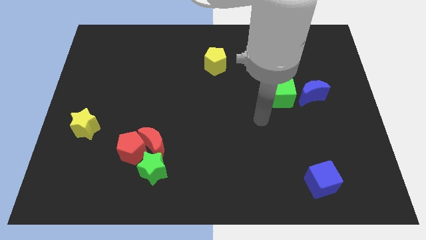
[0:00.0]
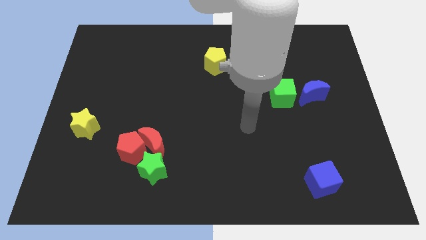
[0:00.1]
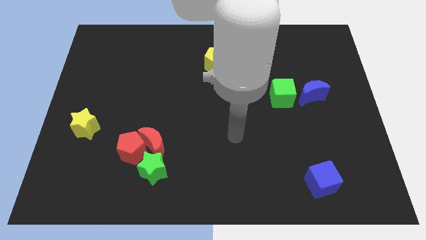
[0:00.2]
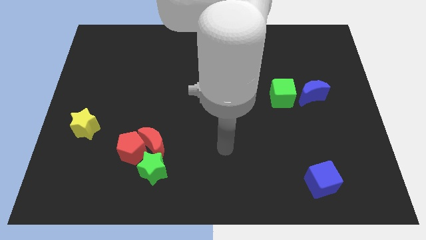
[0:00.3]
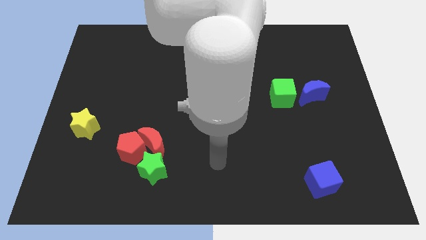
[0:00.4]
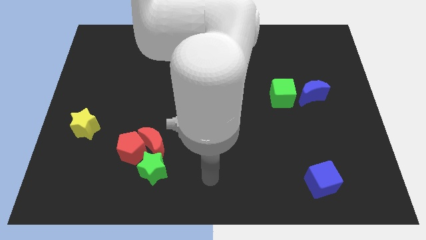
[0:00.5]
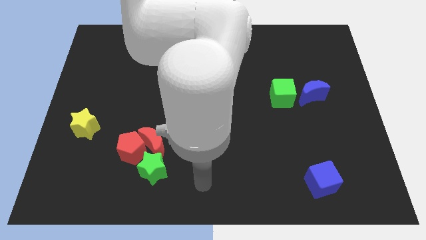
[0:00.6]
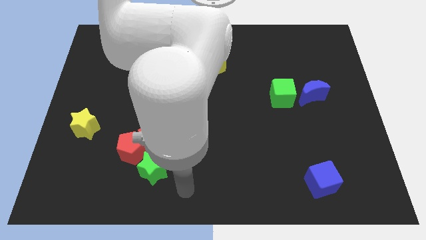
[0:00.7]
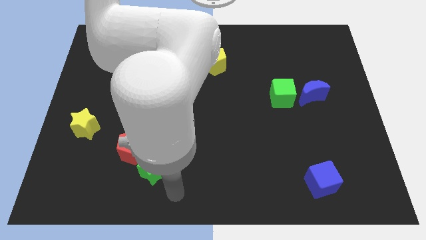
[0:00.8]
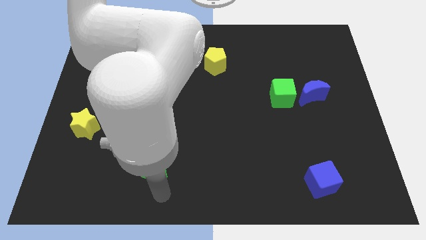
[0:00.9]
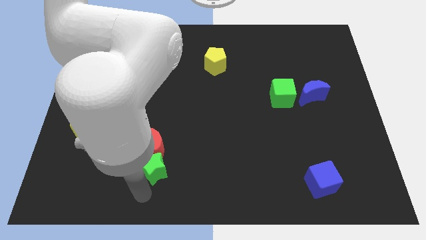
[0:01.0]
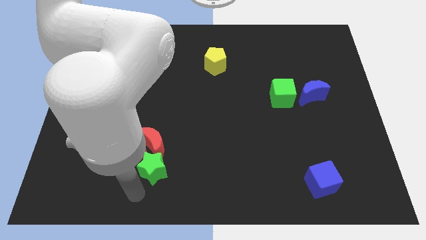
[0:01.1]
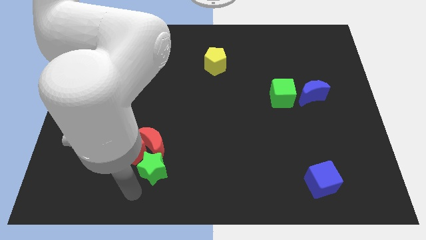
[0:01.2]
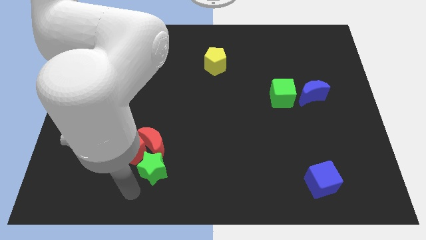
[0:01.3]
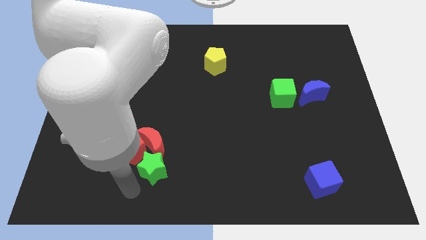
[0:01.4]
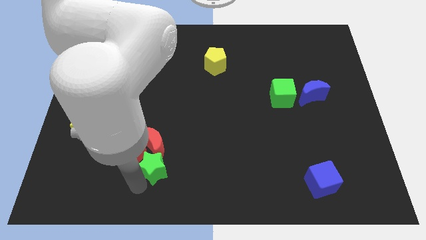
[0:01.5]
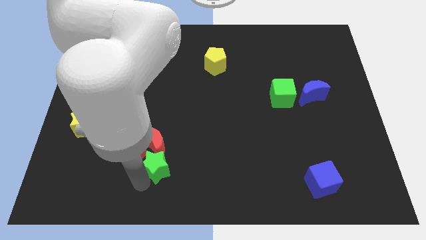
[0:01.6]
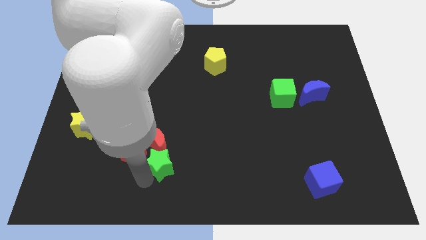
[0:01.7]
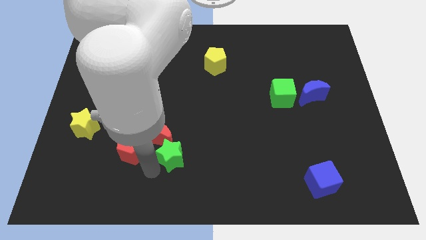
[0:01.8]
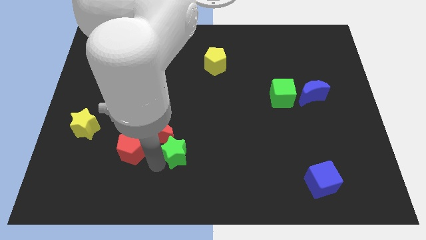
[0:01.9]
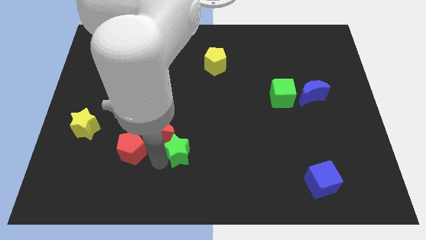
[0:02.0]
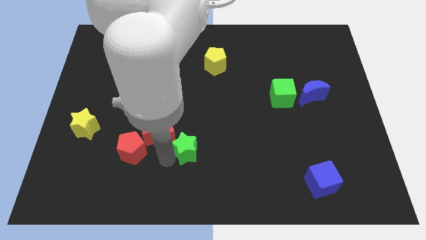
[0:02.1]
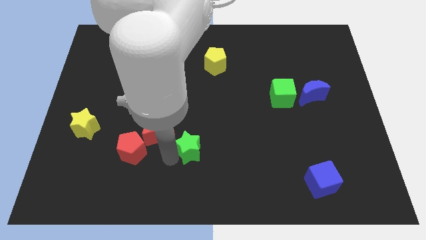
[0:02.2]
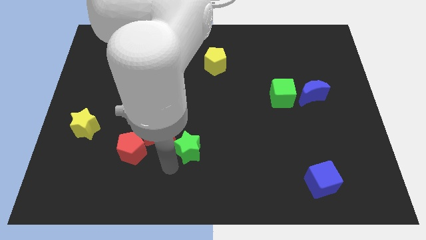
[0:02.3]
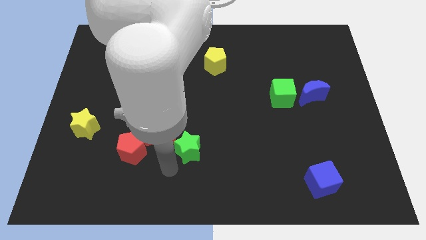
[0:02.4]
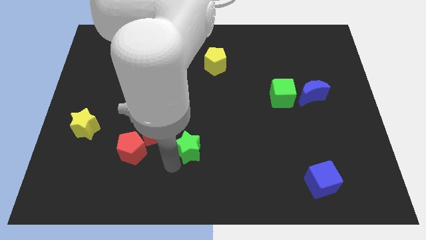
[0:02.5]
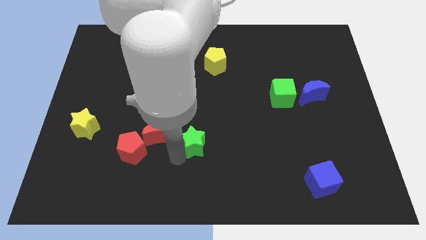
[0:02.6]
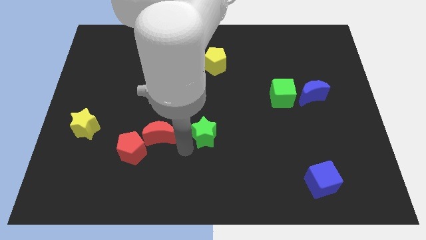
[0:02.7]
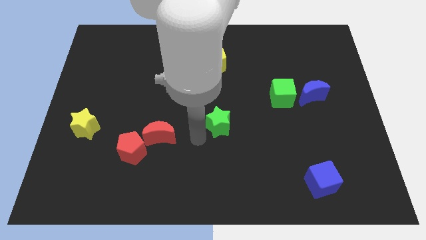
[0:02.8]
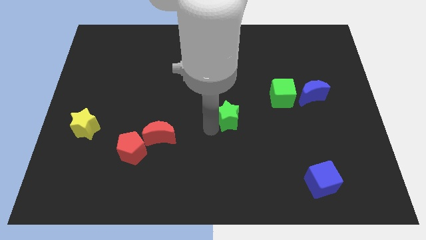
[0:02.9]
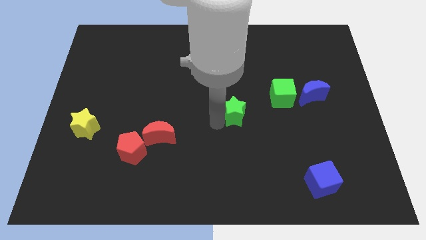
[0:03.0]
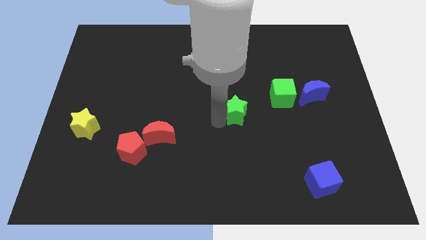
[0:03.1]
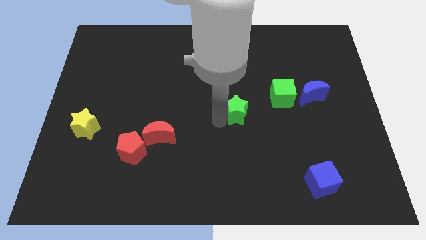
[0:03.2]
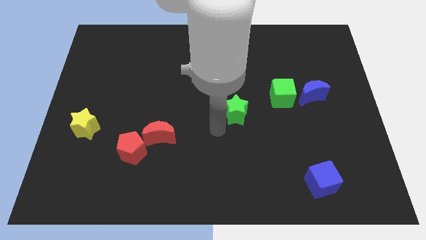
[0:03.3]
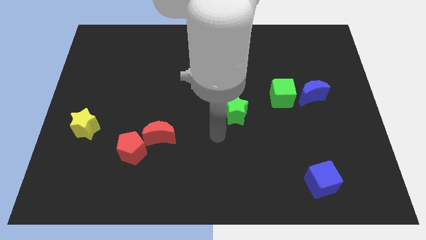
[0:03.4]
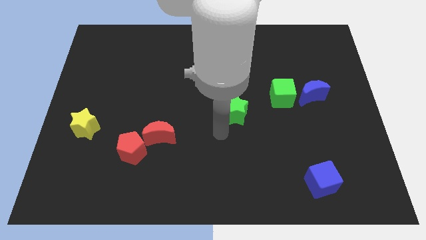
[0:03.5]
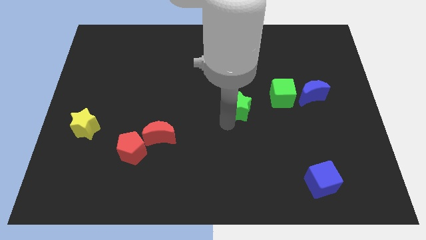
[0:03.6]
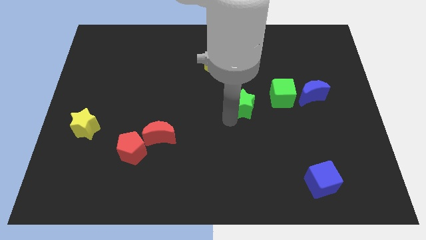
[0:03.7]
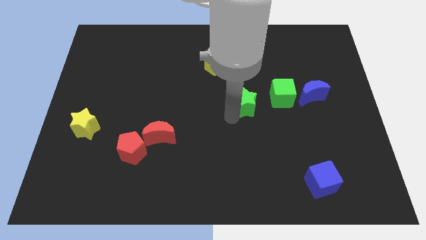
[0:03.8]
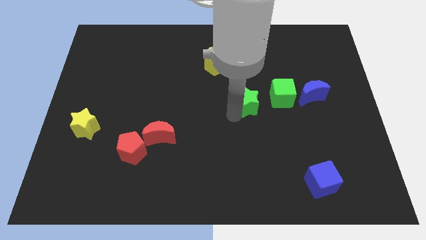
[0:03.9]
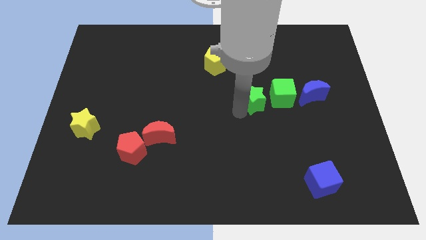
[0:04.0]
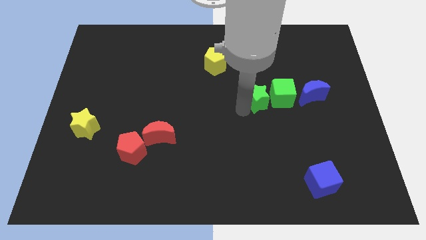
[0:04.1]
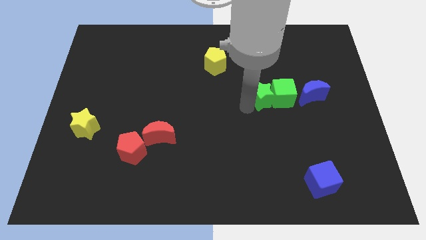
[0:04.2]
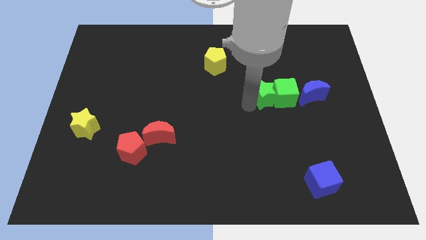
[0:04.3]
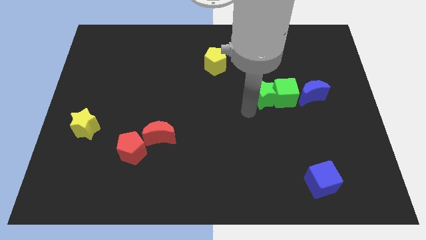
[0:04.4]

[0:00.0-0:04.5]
move green star left the green cube

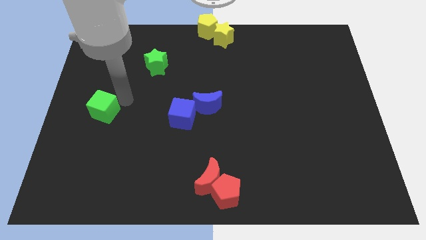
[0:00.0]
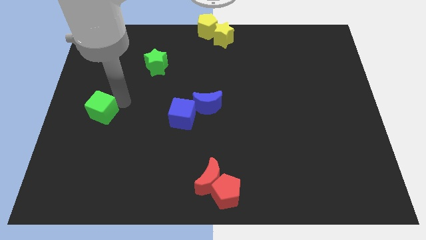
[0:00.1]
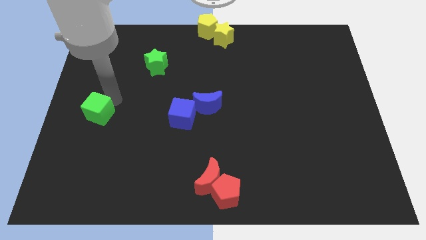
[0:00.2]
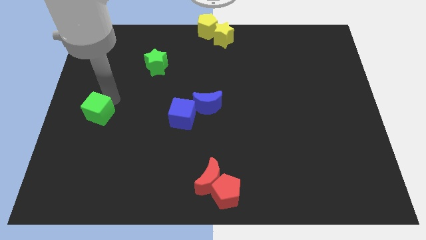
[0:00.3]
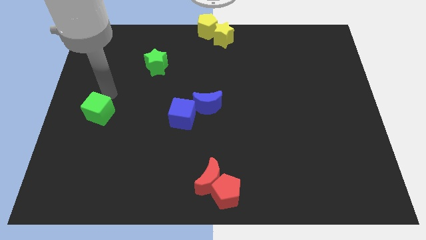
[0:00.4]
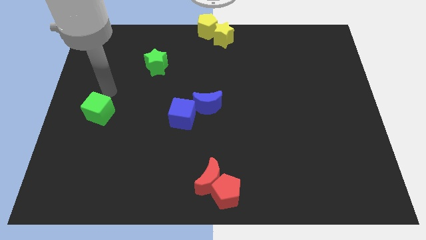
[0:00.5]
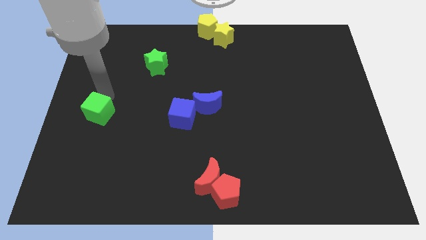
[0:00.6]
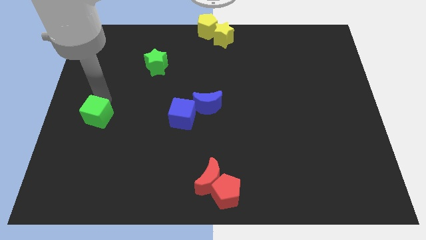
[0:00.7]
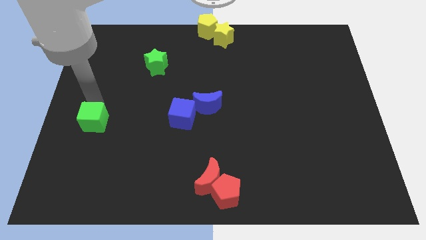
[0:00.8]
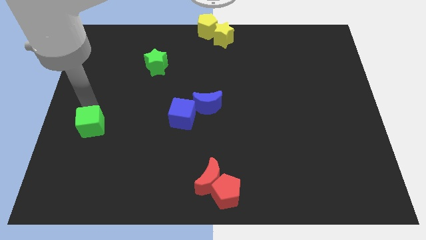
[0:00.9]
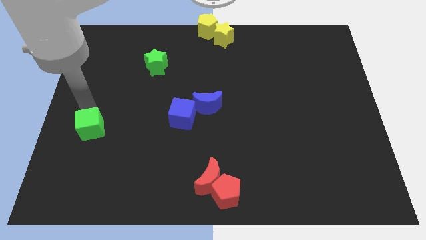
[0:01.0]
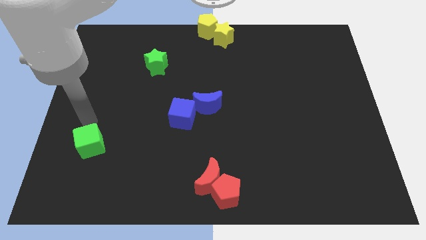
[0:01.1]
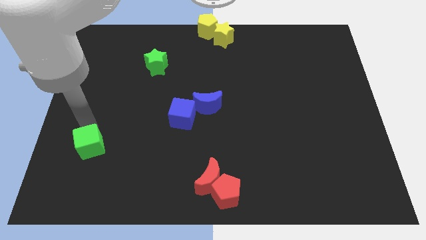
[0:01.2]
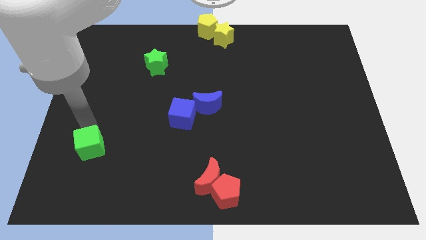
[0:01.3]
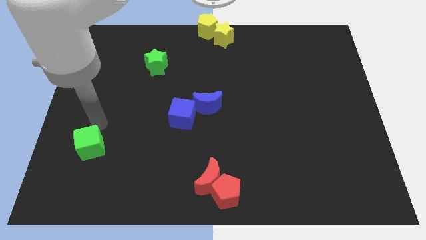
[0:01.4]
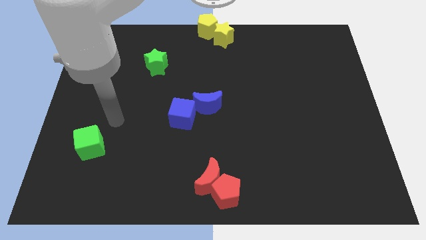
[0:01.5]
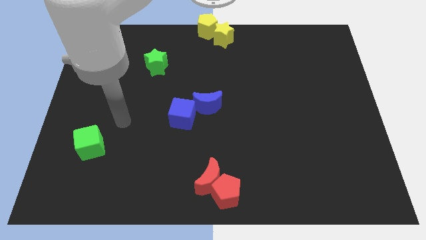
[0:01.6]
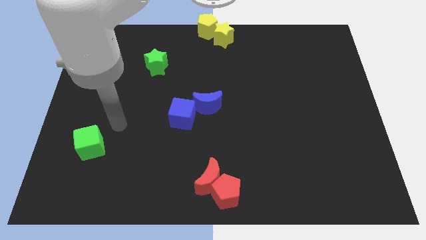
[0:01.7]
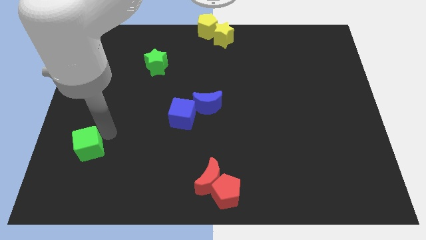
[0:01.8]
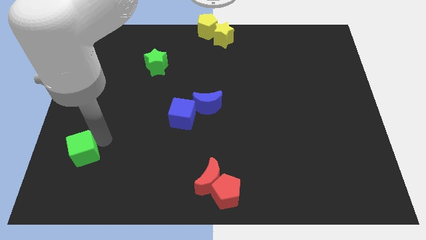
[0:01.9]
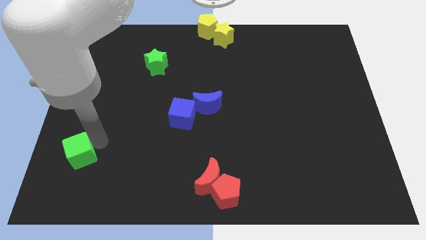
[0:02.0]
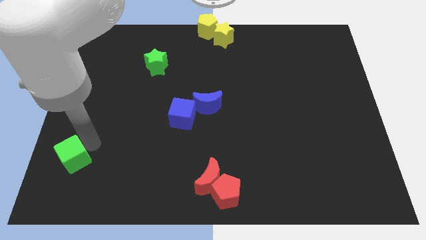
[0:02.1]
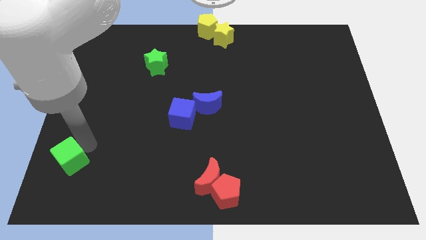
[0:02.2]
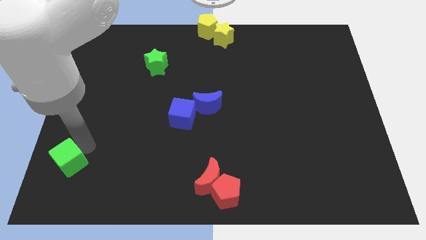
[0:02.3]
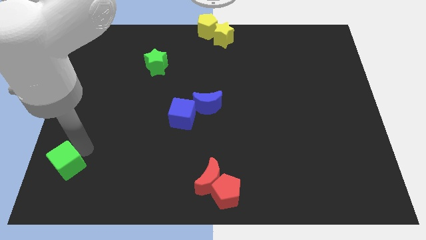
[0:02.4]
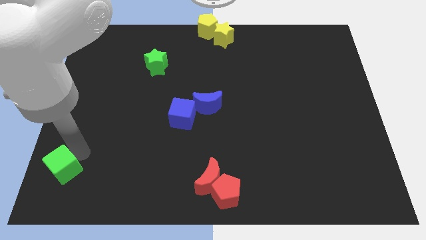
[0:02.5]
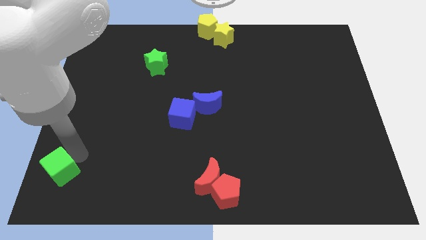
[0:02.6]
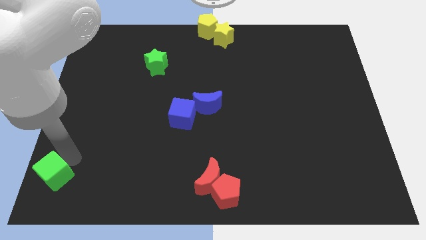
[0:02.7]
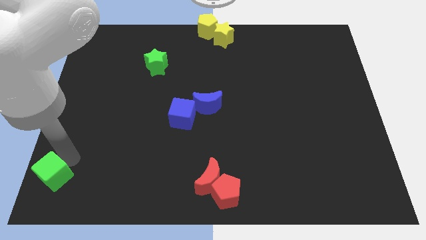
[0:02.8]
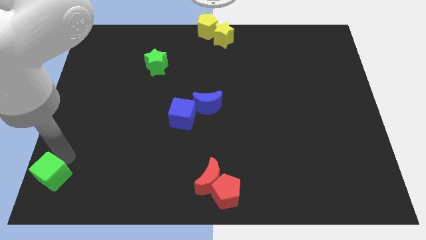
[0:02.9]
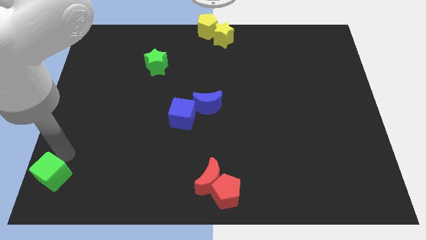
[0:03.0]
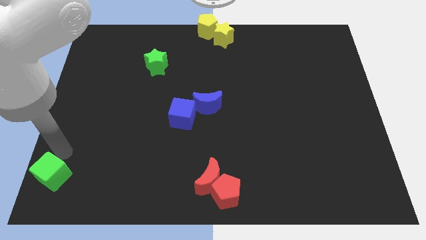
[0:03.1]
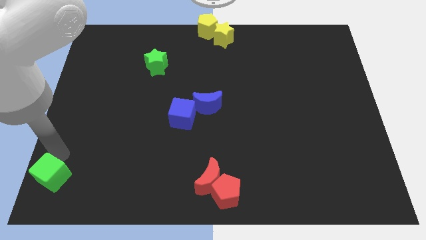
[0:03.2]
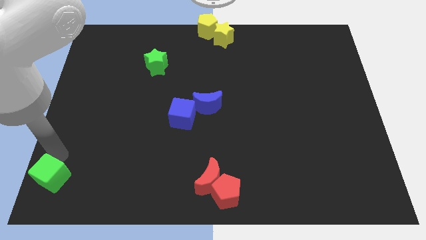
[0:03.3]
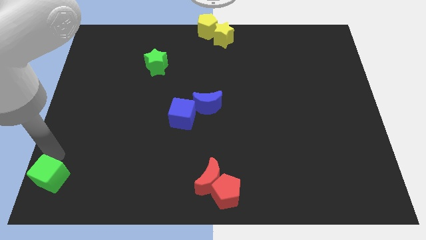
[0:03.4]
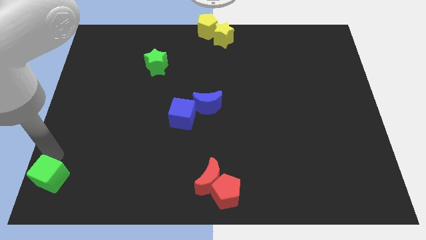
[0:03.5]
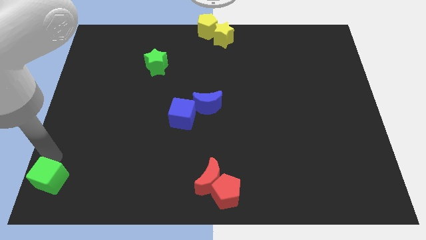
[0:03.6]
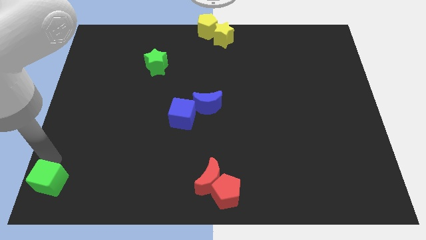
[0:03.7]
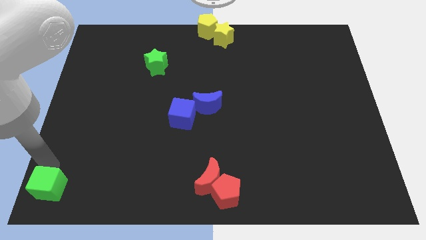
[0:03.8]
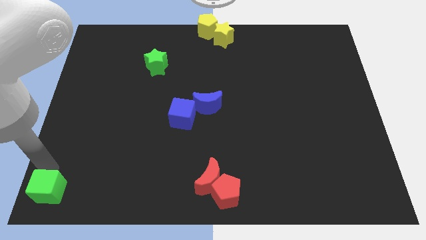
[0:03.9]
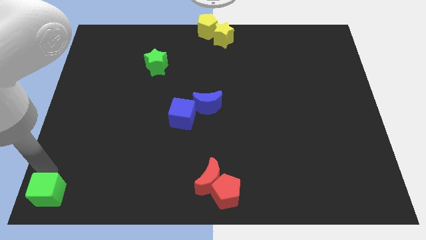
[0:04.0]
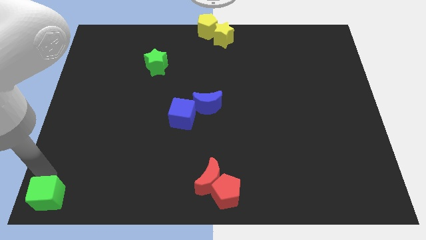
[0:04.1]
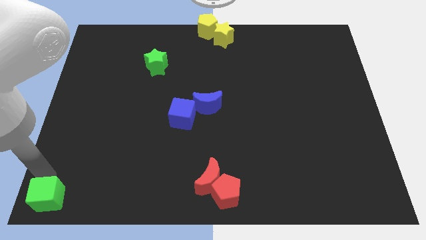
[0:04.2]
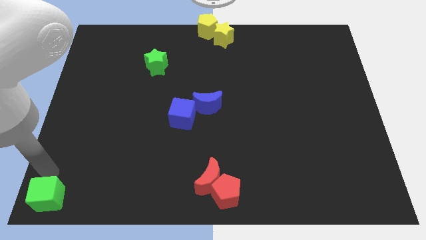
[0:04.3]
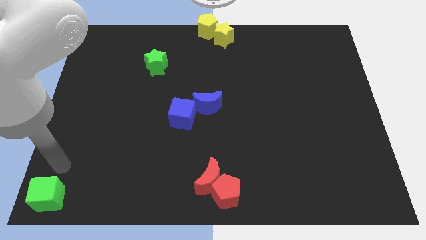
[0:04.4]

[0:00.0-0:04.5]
place the green cube towards the bottom left corner of the board
